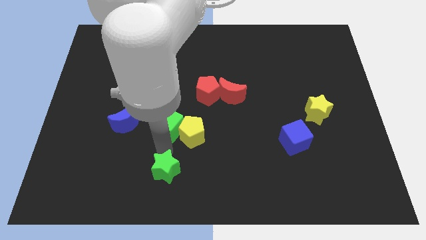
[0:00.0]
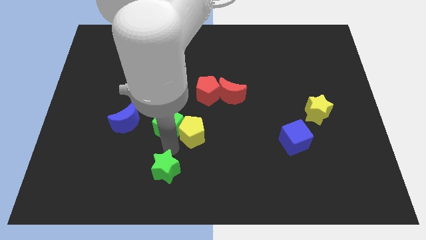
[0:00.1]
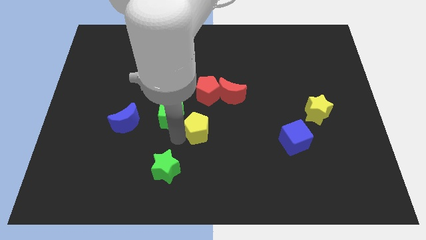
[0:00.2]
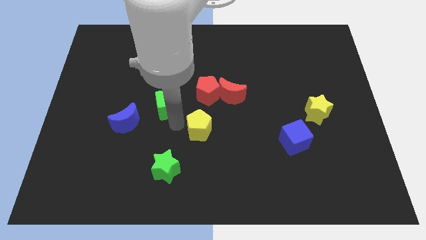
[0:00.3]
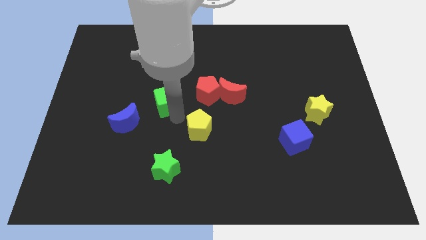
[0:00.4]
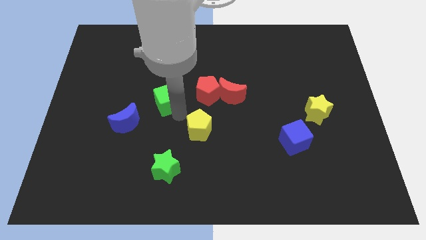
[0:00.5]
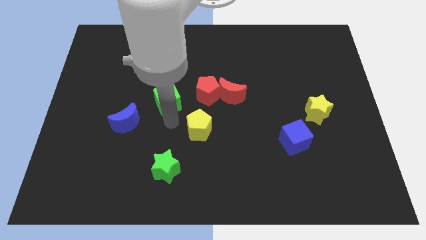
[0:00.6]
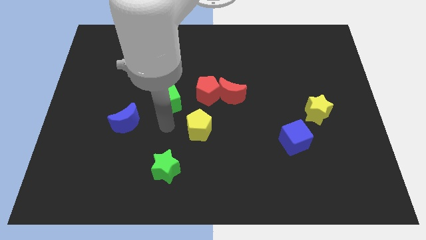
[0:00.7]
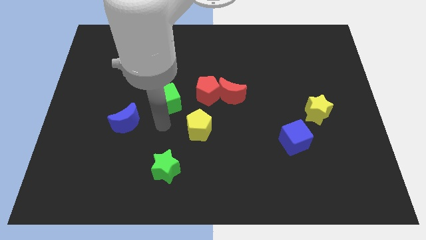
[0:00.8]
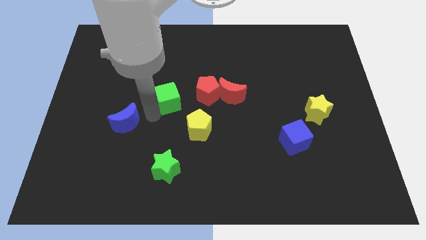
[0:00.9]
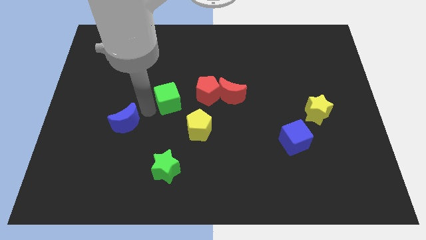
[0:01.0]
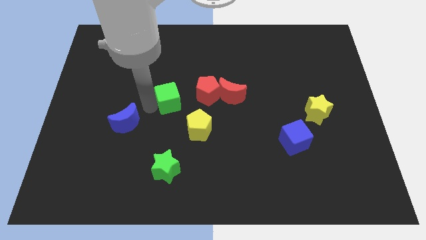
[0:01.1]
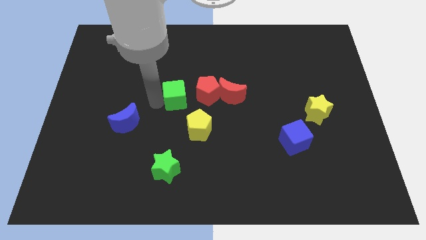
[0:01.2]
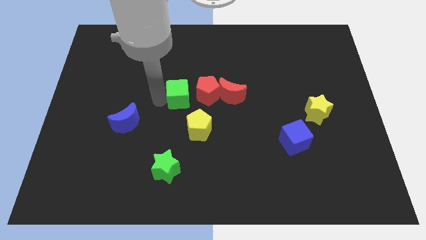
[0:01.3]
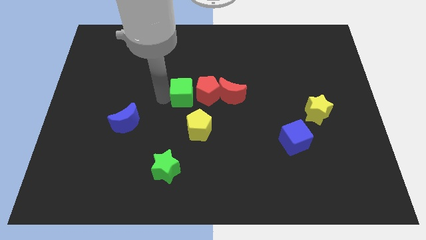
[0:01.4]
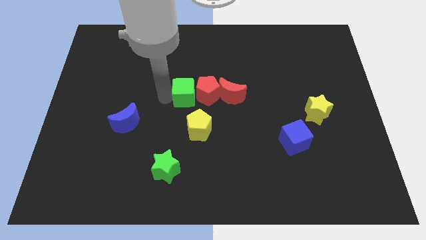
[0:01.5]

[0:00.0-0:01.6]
move the green cube left to red pentagon

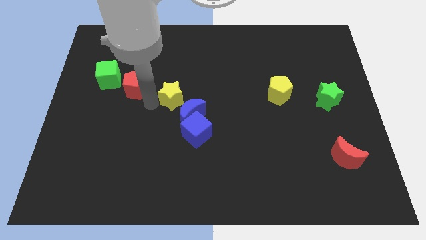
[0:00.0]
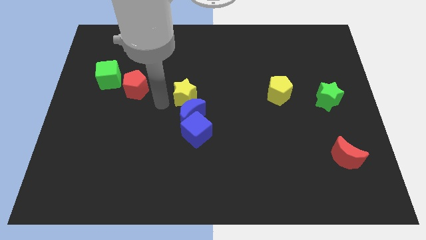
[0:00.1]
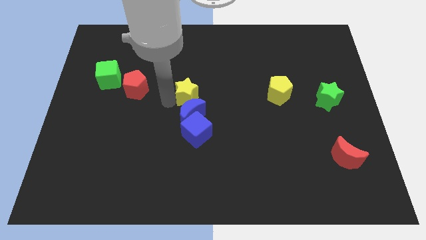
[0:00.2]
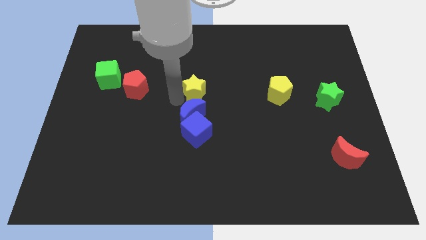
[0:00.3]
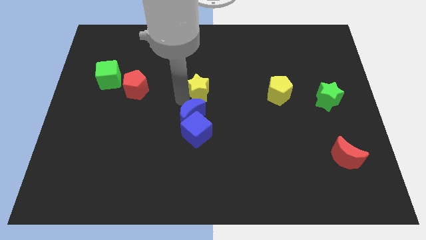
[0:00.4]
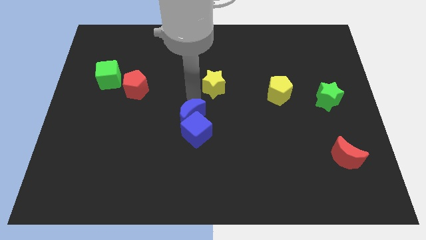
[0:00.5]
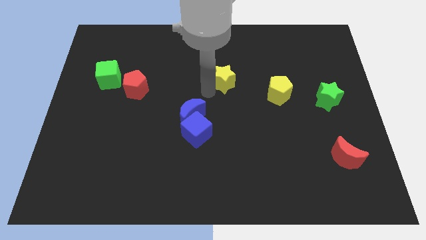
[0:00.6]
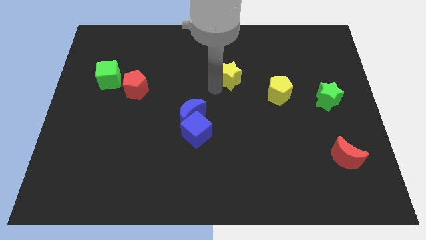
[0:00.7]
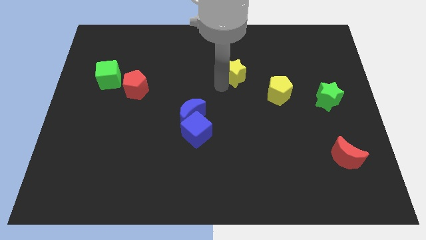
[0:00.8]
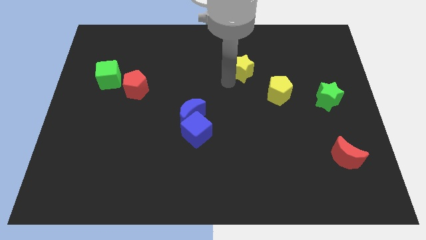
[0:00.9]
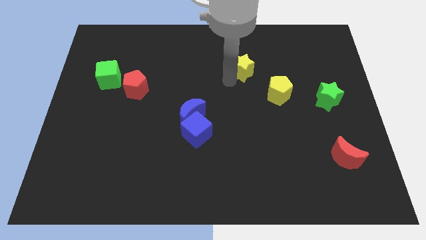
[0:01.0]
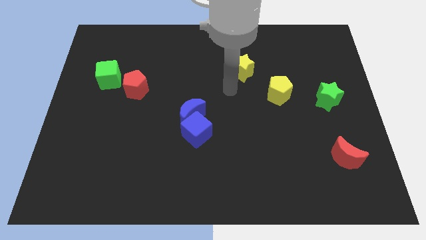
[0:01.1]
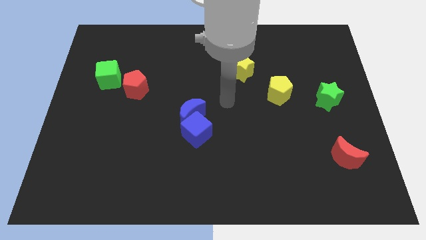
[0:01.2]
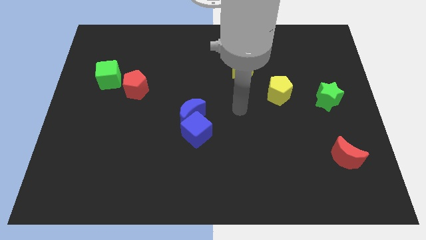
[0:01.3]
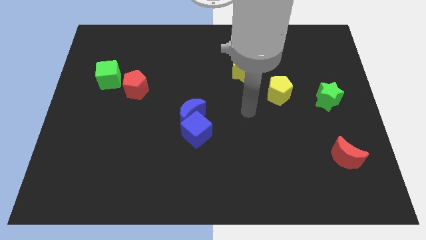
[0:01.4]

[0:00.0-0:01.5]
move the yellow star towards the top right corner

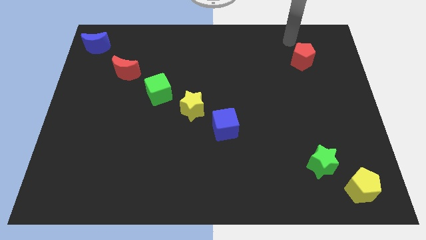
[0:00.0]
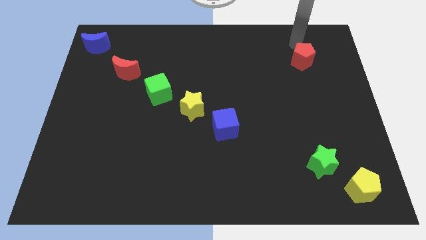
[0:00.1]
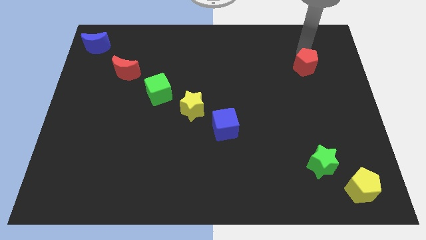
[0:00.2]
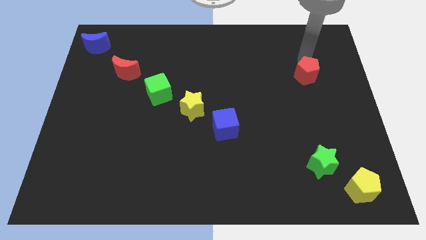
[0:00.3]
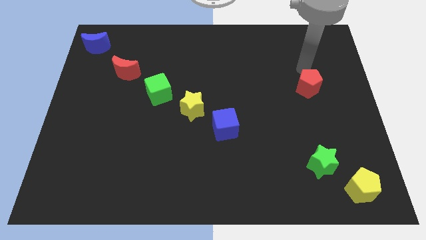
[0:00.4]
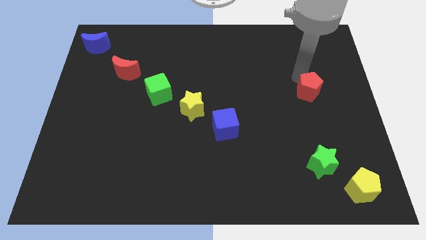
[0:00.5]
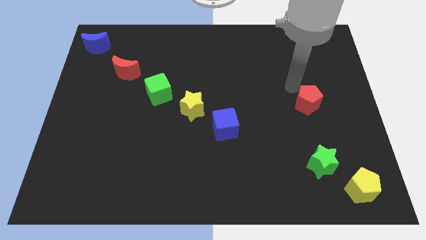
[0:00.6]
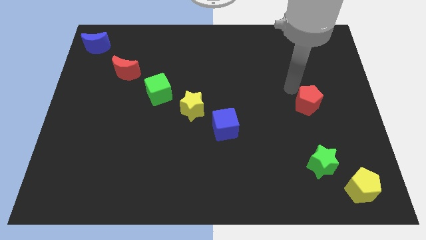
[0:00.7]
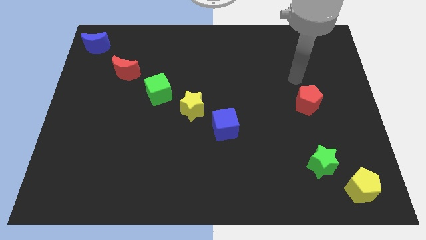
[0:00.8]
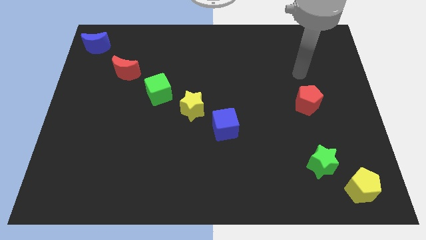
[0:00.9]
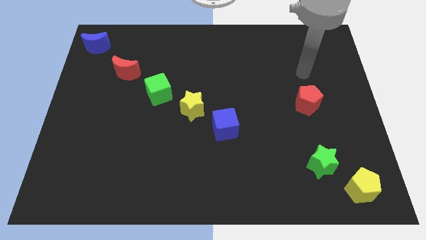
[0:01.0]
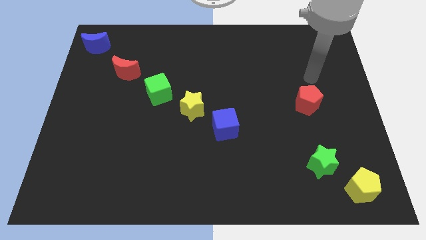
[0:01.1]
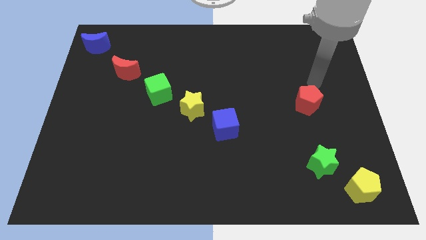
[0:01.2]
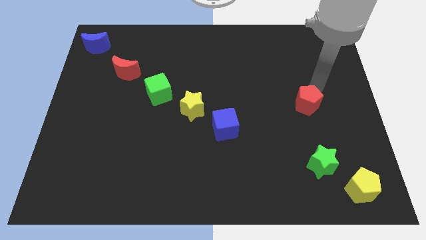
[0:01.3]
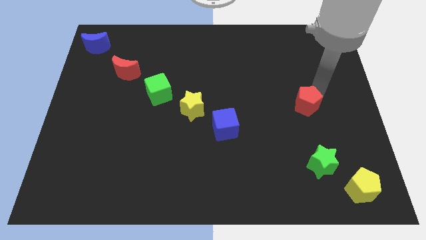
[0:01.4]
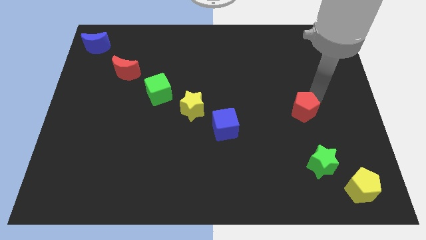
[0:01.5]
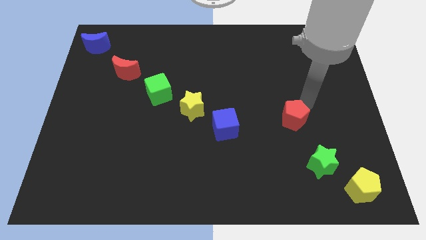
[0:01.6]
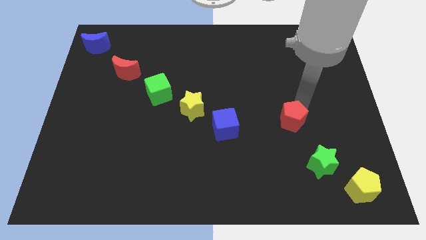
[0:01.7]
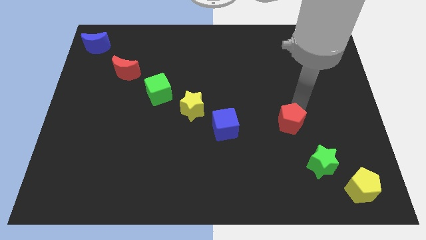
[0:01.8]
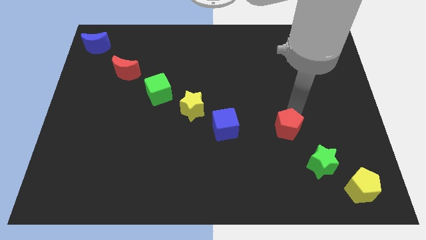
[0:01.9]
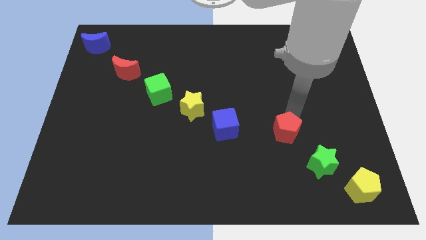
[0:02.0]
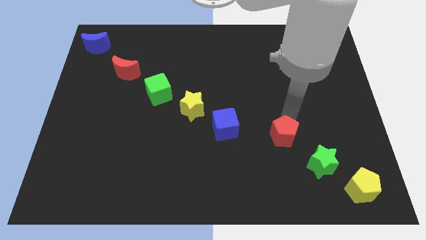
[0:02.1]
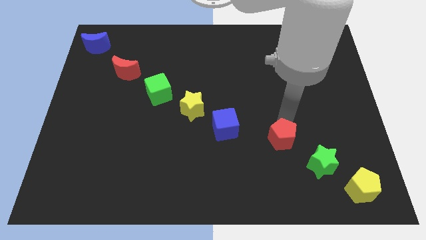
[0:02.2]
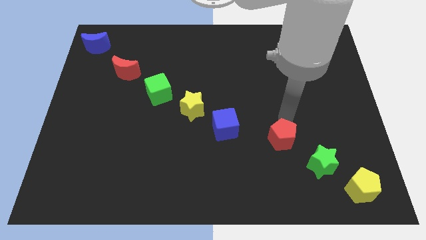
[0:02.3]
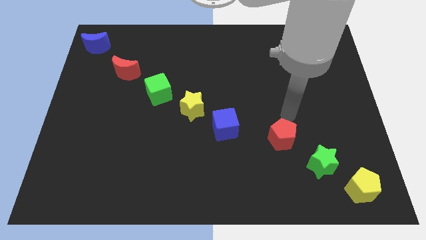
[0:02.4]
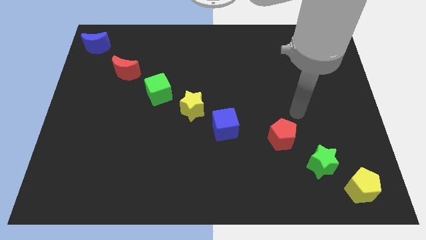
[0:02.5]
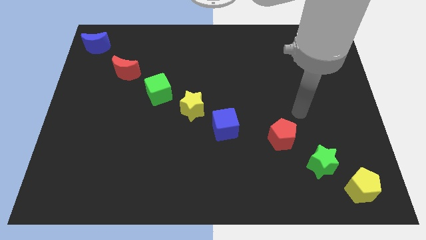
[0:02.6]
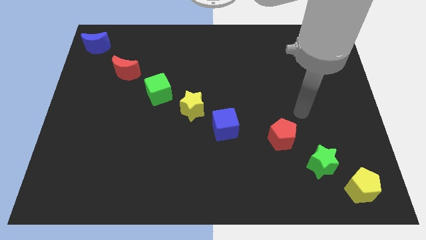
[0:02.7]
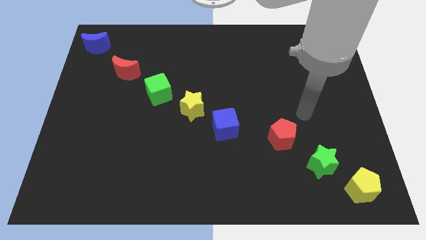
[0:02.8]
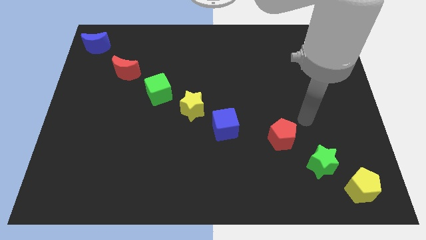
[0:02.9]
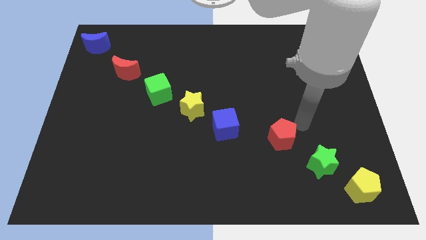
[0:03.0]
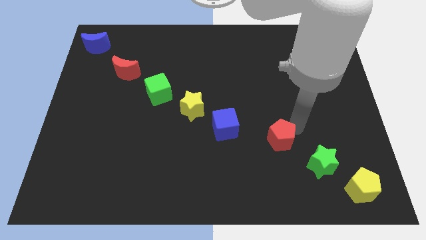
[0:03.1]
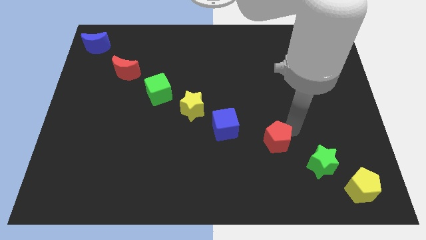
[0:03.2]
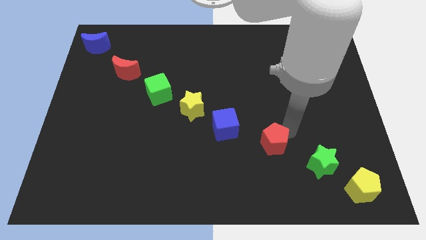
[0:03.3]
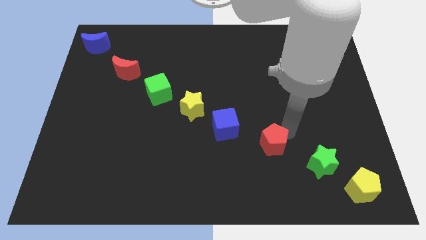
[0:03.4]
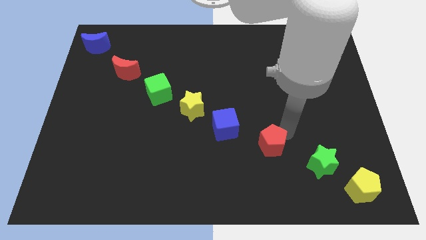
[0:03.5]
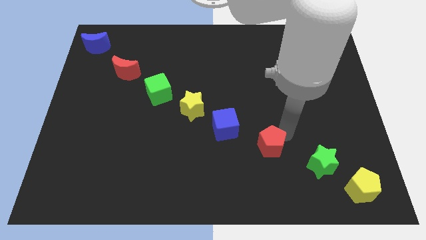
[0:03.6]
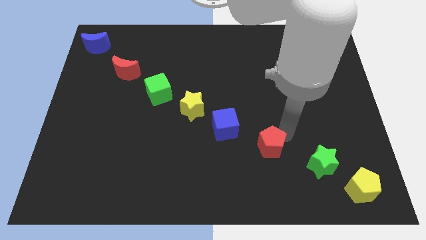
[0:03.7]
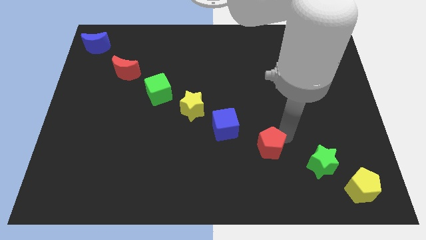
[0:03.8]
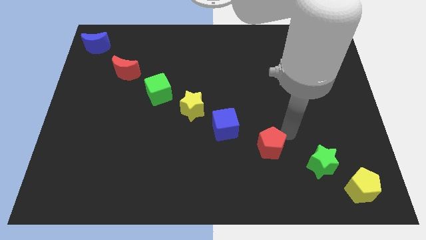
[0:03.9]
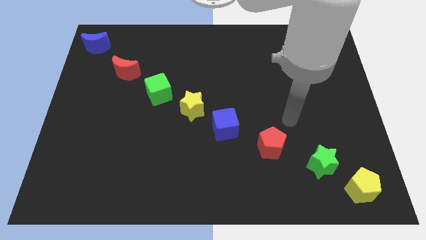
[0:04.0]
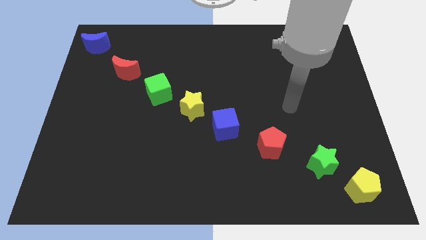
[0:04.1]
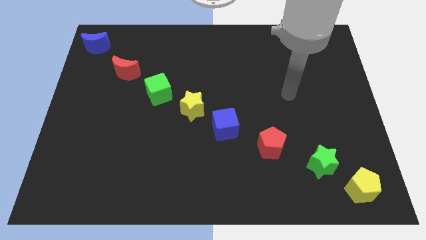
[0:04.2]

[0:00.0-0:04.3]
push red pentagon to top left of green star

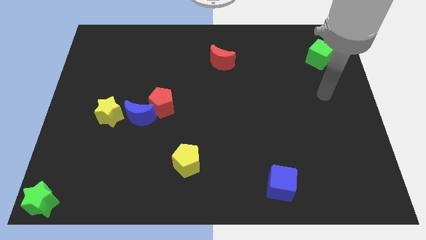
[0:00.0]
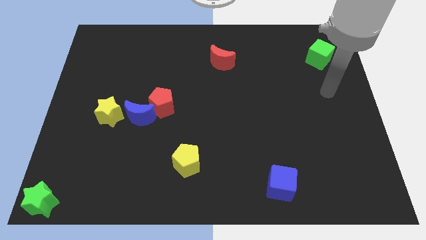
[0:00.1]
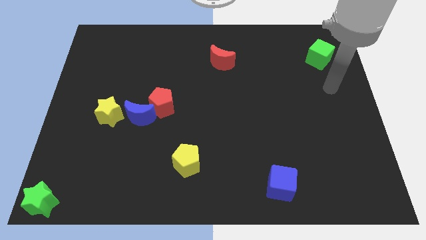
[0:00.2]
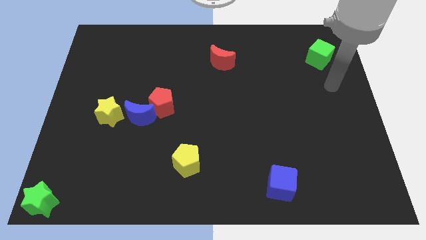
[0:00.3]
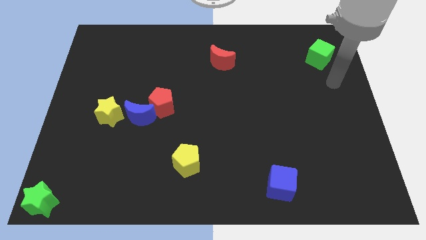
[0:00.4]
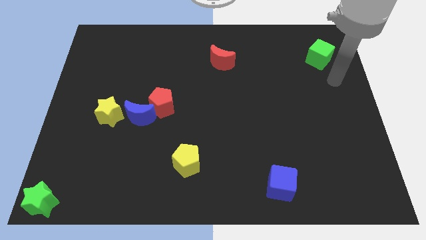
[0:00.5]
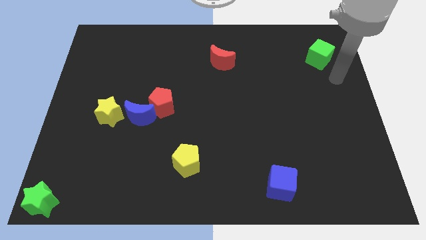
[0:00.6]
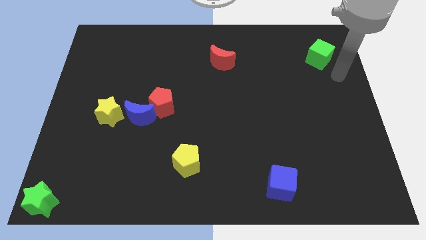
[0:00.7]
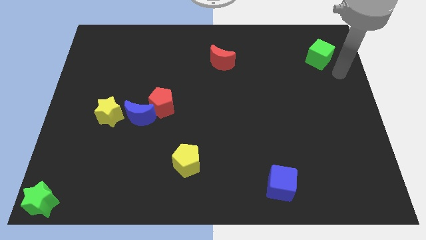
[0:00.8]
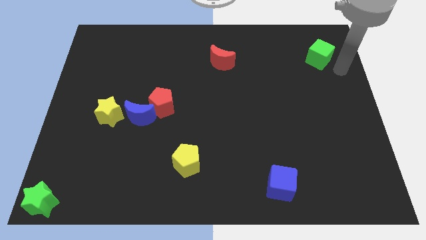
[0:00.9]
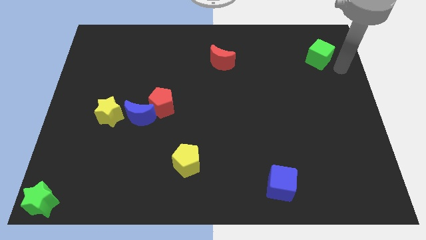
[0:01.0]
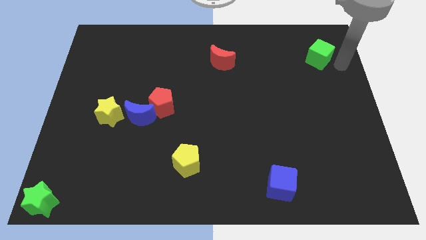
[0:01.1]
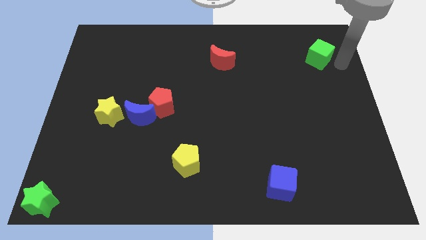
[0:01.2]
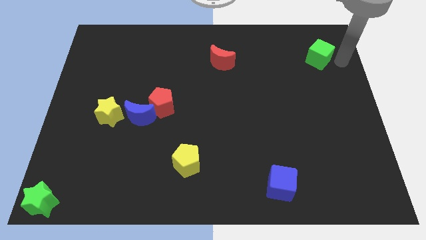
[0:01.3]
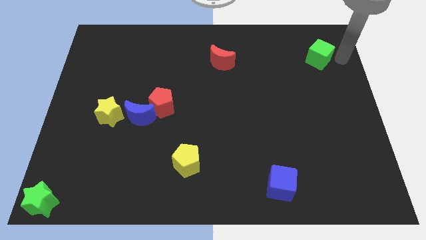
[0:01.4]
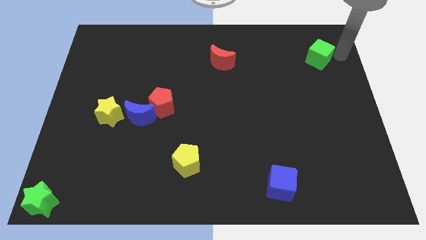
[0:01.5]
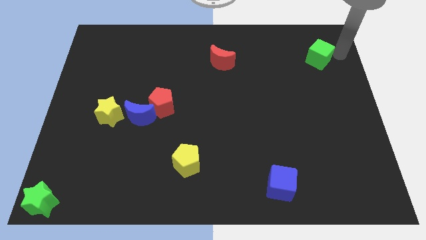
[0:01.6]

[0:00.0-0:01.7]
move your arm towards the right of the green cube
